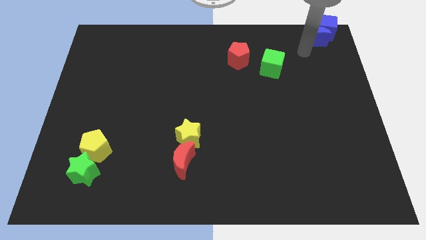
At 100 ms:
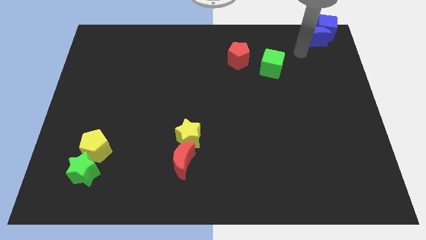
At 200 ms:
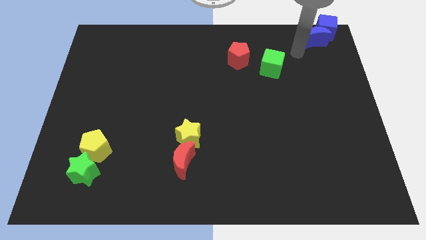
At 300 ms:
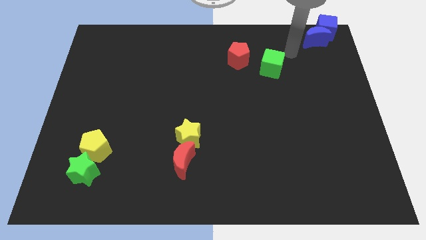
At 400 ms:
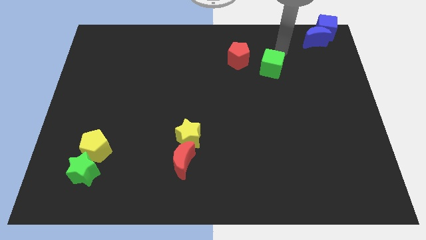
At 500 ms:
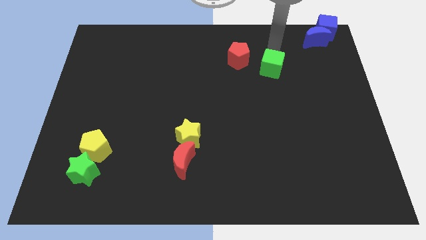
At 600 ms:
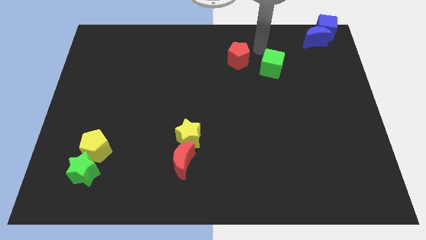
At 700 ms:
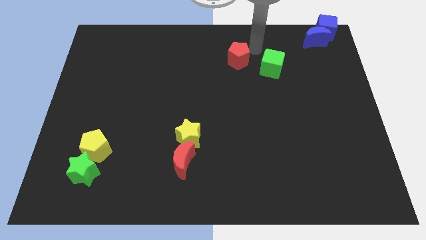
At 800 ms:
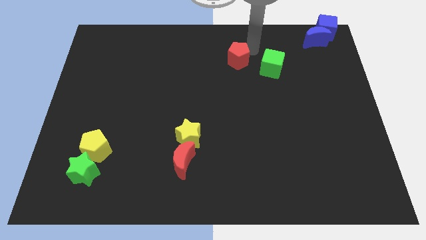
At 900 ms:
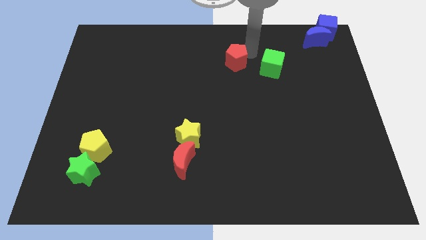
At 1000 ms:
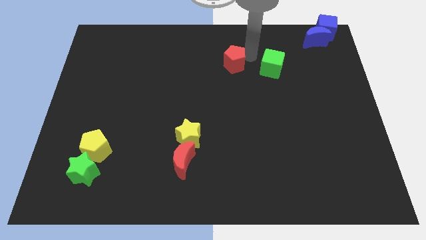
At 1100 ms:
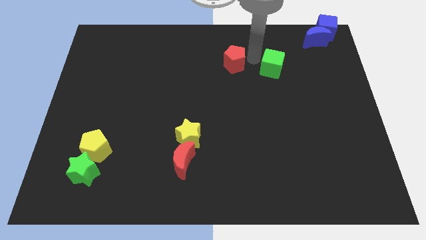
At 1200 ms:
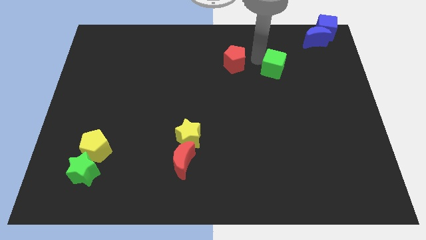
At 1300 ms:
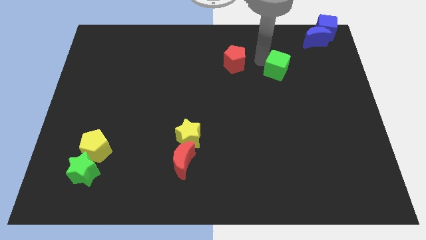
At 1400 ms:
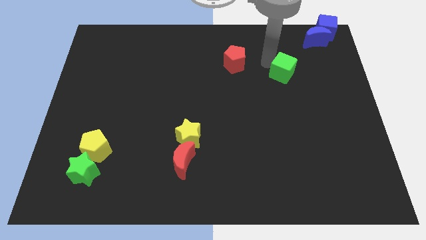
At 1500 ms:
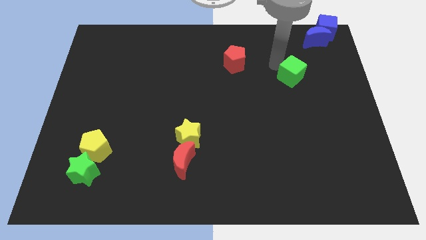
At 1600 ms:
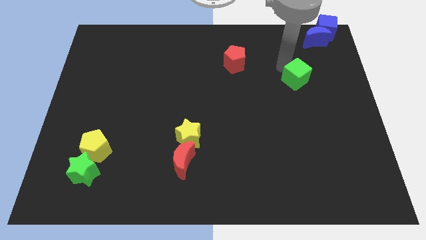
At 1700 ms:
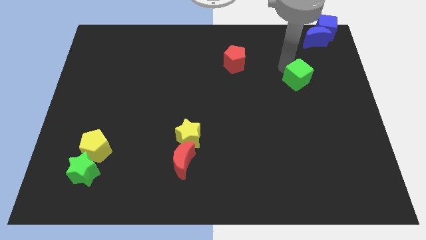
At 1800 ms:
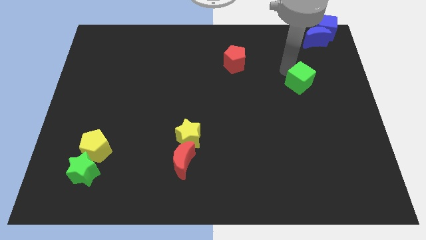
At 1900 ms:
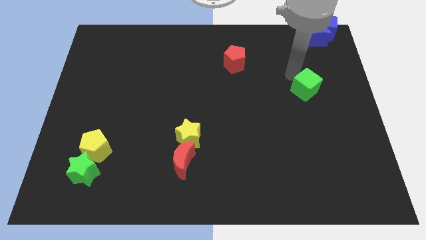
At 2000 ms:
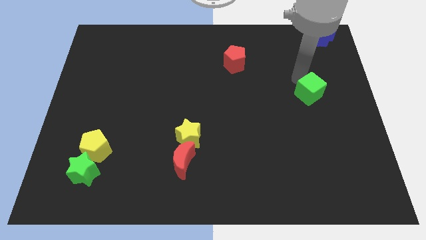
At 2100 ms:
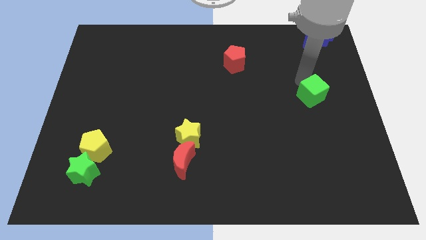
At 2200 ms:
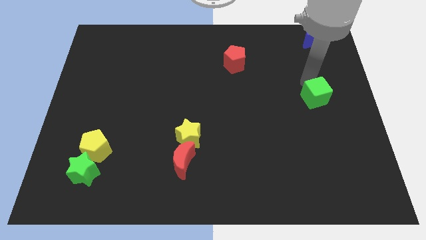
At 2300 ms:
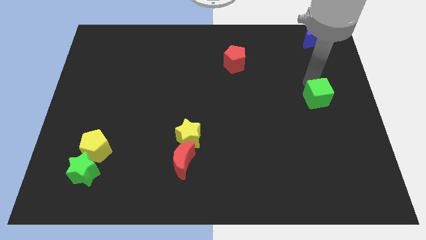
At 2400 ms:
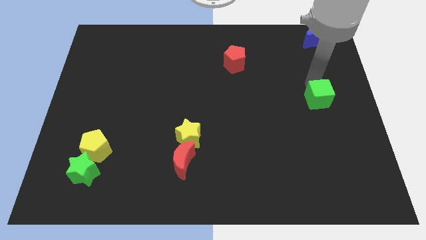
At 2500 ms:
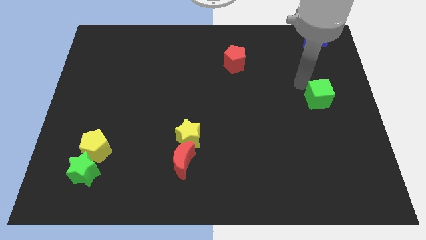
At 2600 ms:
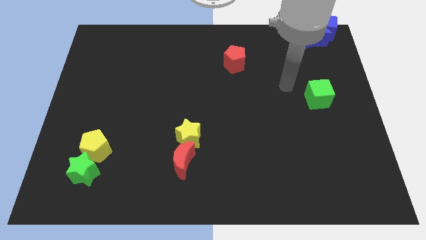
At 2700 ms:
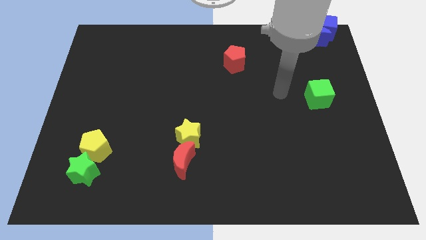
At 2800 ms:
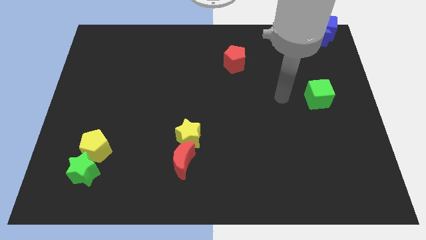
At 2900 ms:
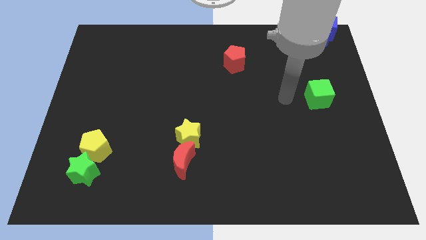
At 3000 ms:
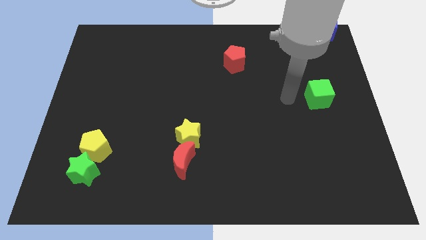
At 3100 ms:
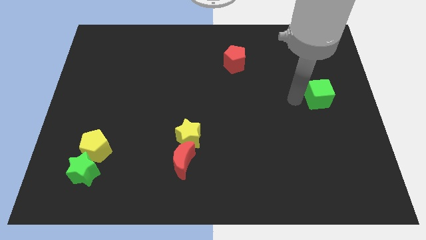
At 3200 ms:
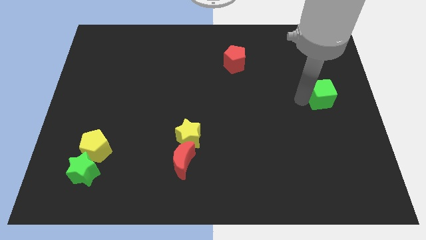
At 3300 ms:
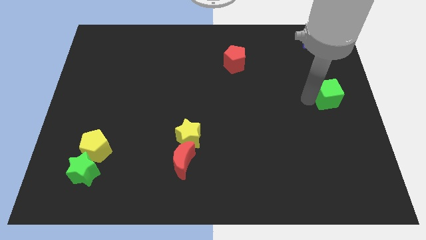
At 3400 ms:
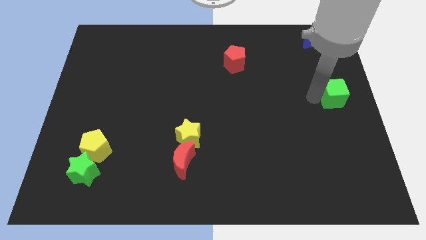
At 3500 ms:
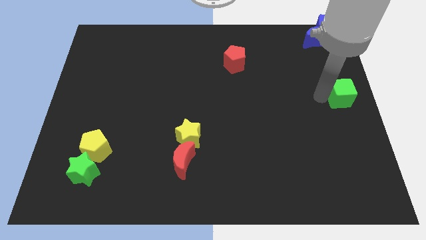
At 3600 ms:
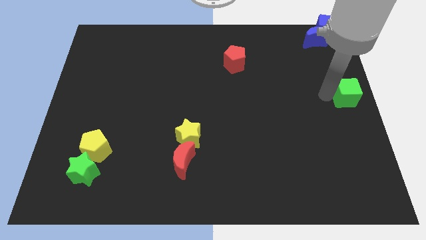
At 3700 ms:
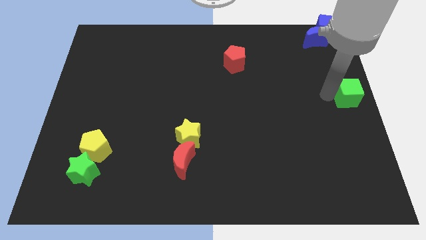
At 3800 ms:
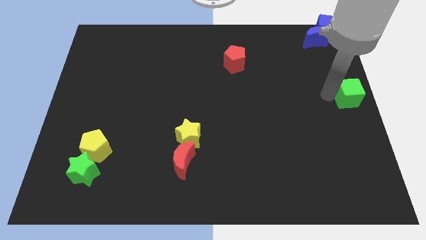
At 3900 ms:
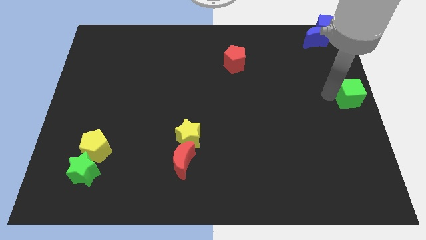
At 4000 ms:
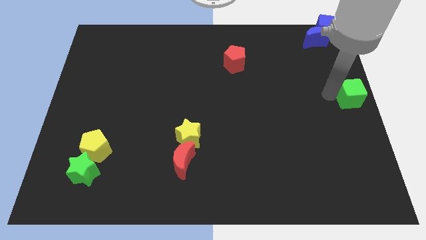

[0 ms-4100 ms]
slide the green cube to the center right of the table

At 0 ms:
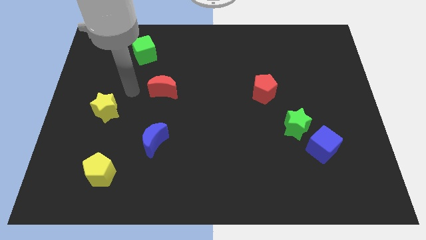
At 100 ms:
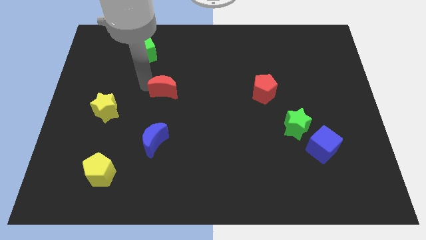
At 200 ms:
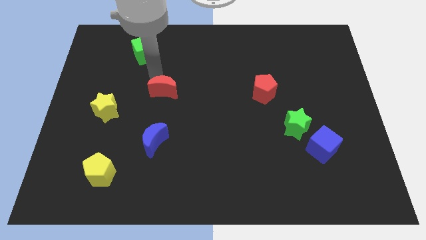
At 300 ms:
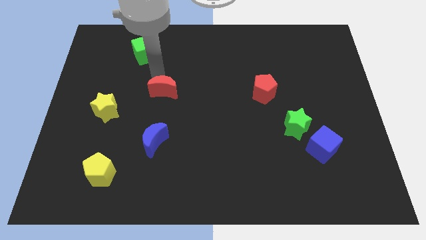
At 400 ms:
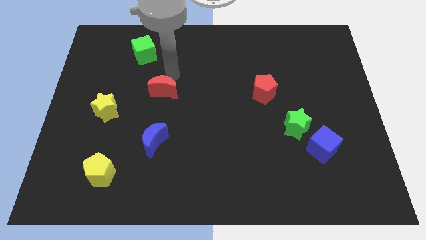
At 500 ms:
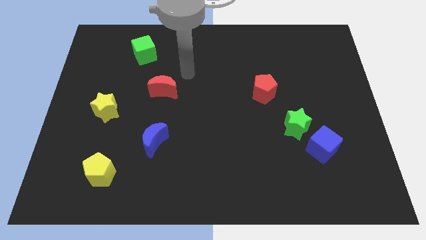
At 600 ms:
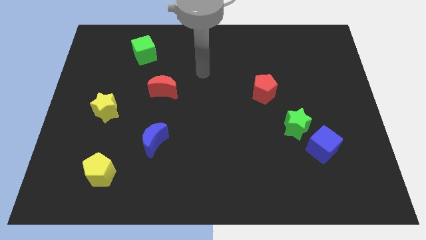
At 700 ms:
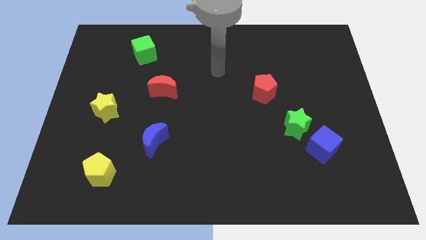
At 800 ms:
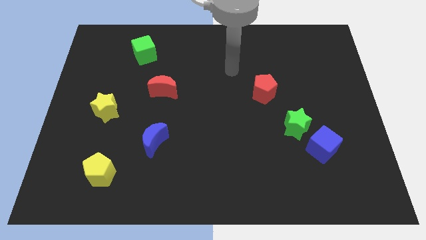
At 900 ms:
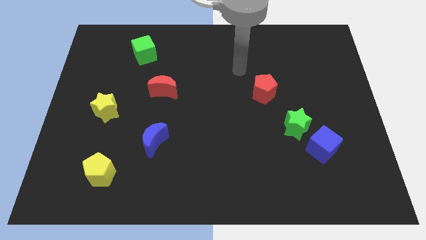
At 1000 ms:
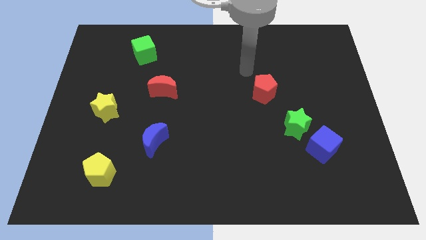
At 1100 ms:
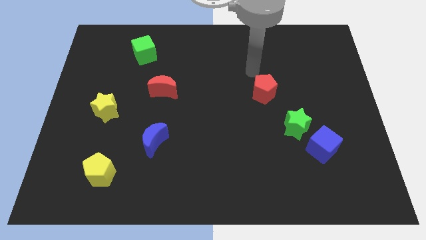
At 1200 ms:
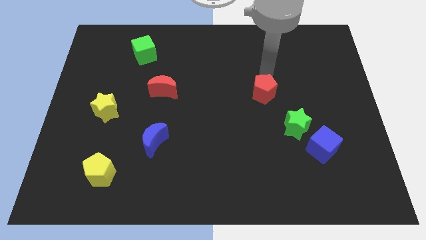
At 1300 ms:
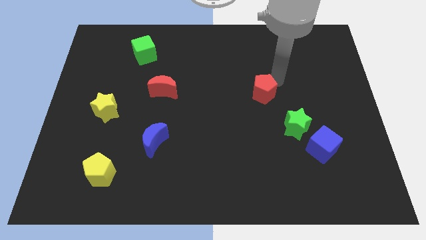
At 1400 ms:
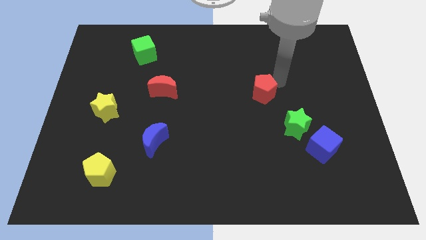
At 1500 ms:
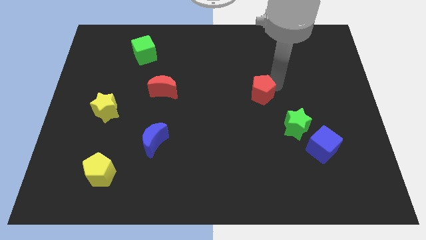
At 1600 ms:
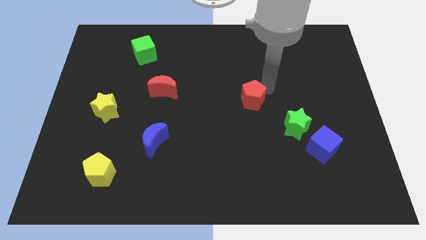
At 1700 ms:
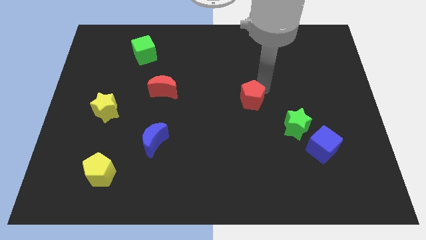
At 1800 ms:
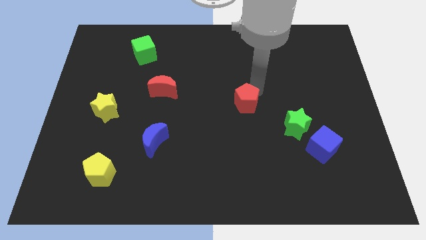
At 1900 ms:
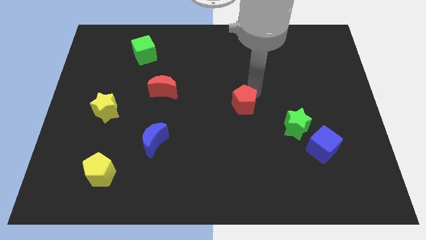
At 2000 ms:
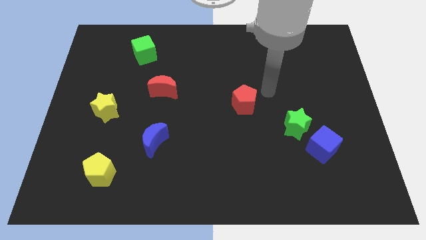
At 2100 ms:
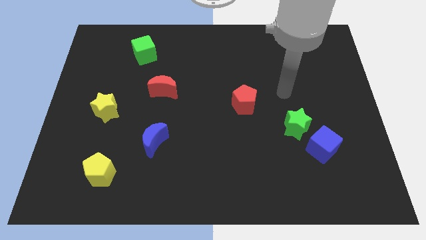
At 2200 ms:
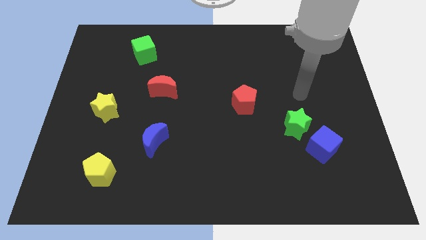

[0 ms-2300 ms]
slightly push the red pentagon between red moon and green star

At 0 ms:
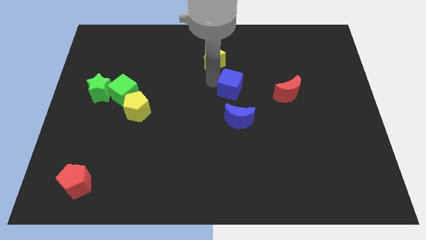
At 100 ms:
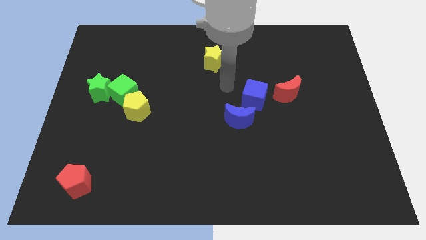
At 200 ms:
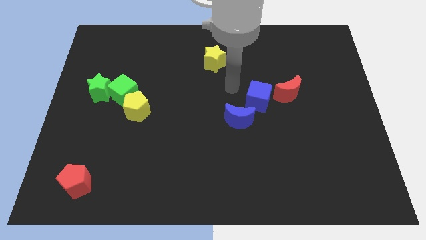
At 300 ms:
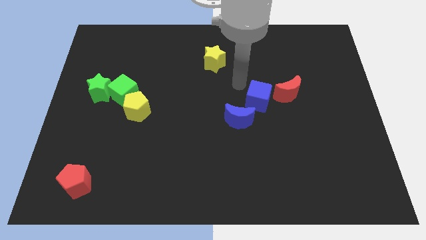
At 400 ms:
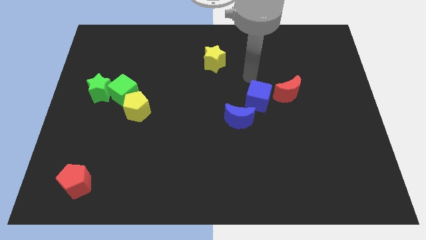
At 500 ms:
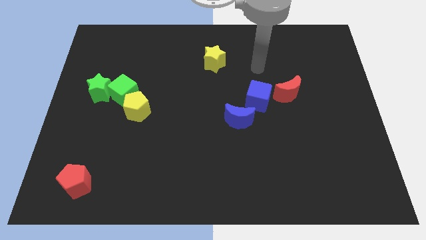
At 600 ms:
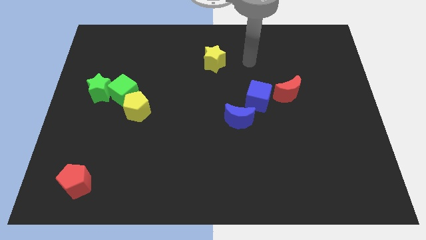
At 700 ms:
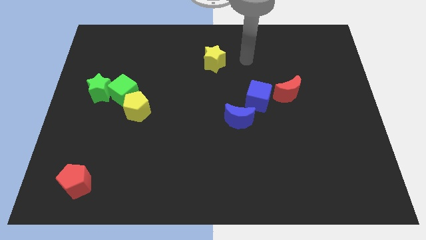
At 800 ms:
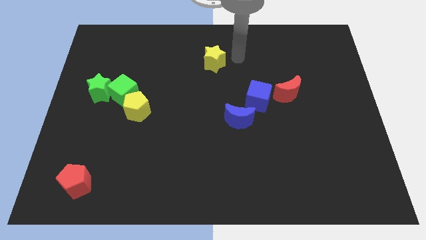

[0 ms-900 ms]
push the blue cube near to the red crescent

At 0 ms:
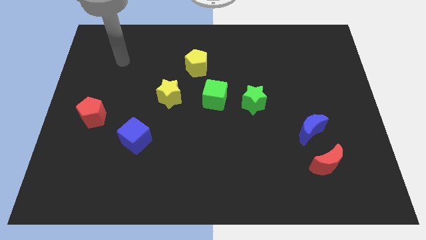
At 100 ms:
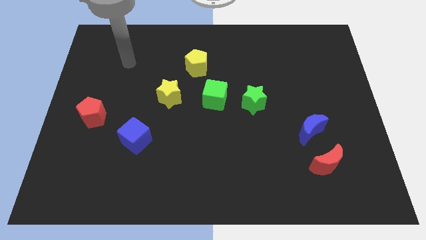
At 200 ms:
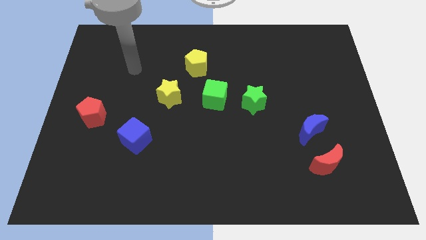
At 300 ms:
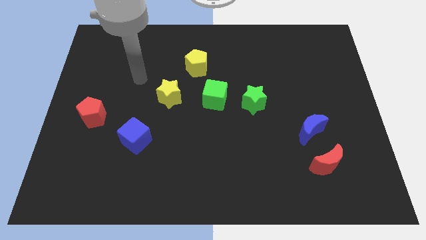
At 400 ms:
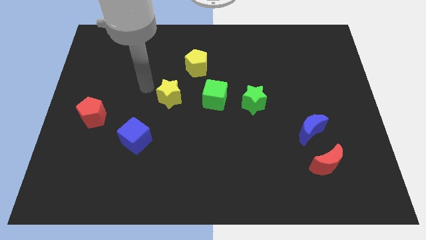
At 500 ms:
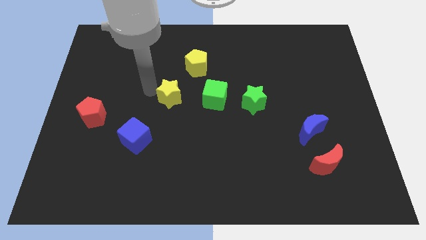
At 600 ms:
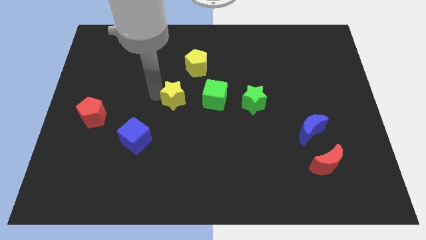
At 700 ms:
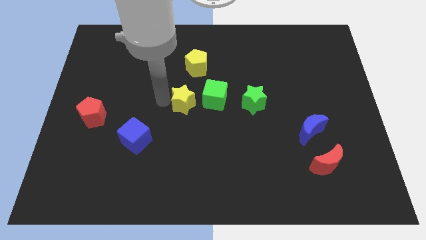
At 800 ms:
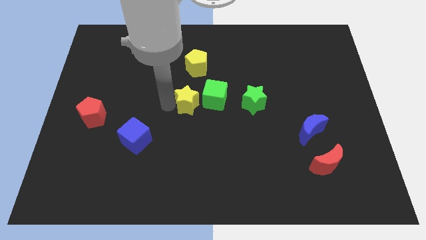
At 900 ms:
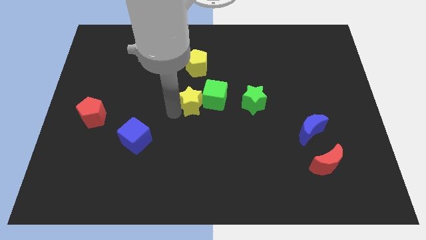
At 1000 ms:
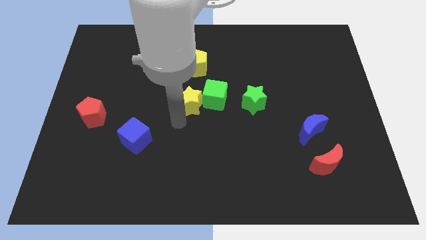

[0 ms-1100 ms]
push the yellow star into the green cube

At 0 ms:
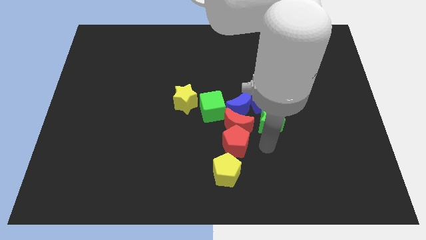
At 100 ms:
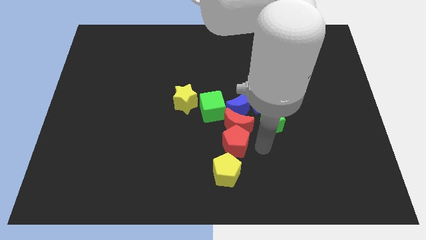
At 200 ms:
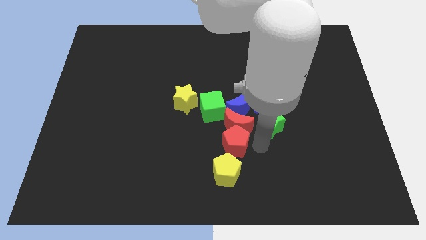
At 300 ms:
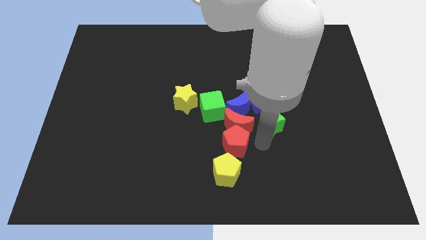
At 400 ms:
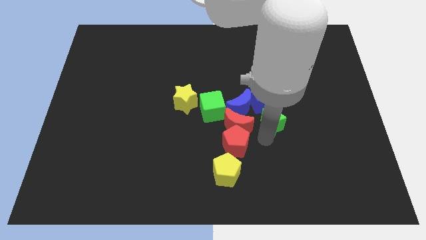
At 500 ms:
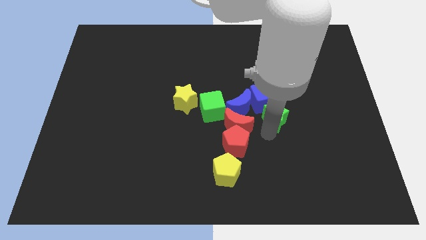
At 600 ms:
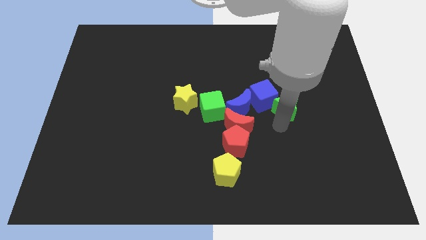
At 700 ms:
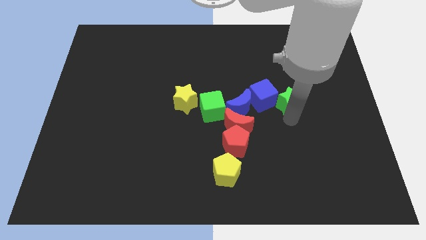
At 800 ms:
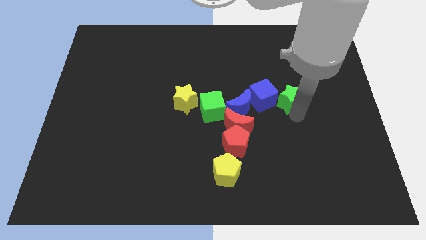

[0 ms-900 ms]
push the green star into the blue cube
